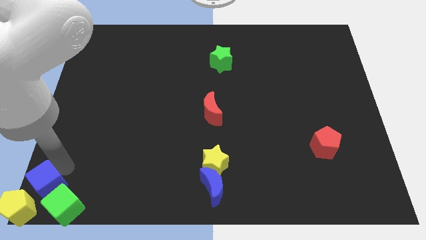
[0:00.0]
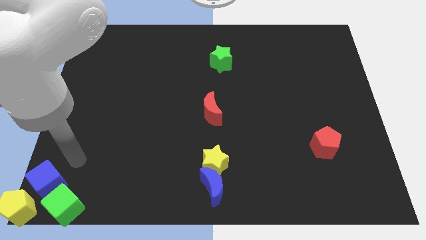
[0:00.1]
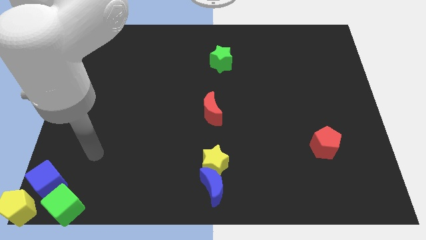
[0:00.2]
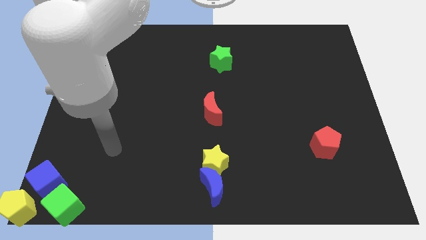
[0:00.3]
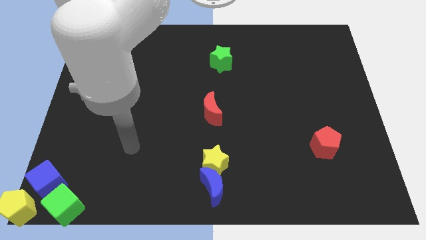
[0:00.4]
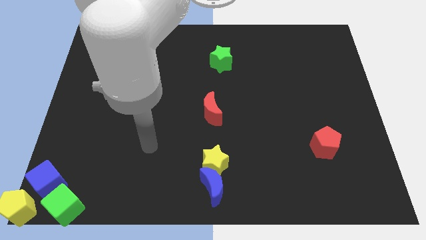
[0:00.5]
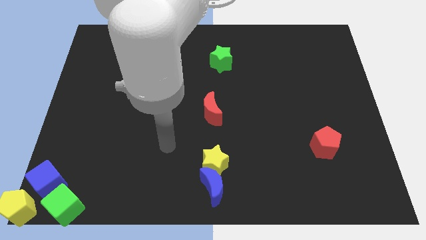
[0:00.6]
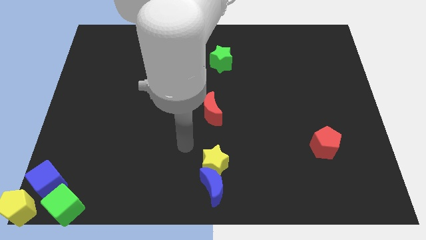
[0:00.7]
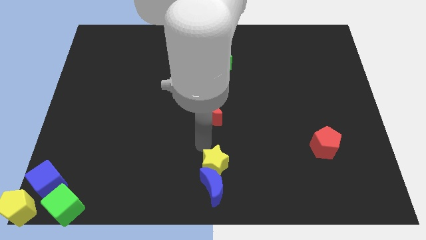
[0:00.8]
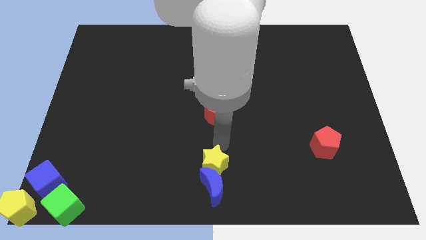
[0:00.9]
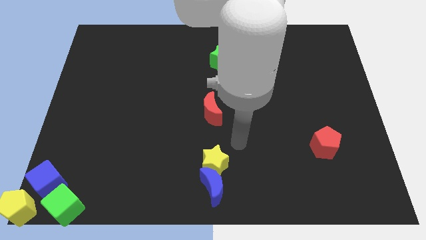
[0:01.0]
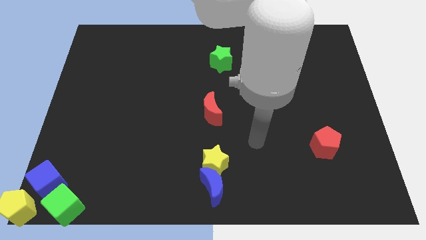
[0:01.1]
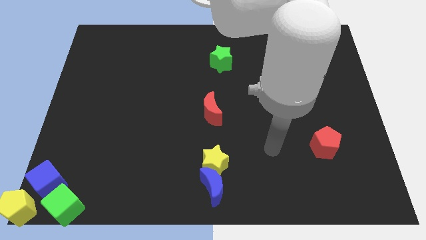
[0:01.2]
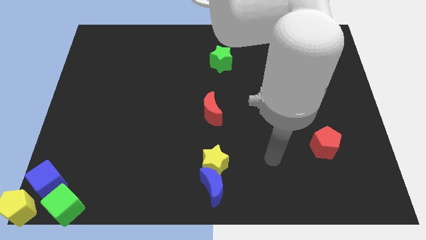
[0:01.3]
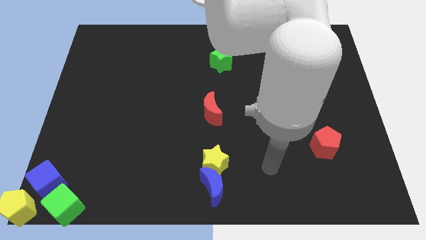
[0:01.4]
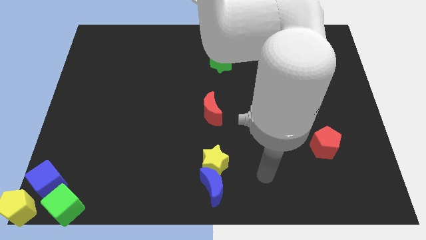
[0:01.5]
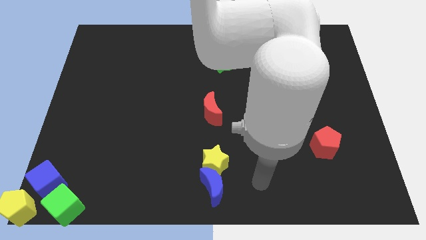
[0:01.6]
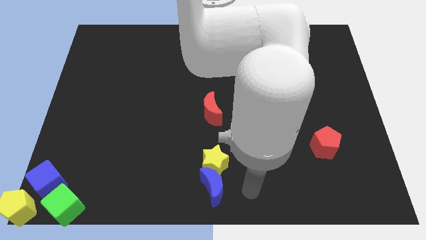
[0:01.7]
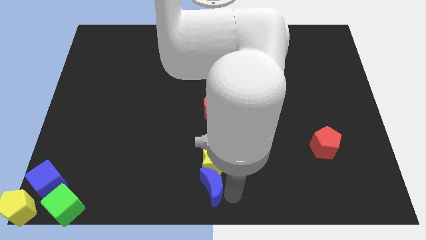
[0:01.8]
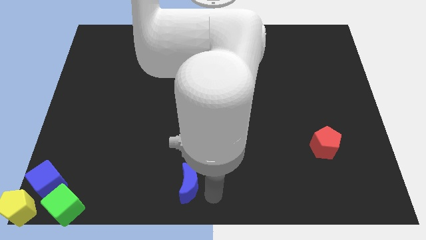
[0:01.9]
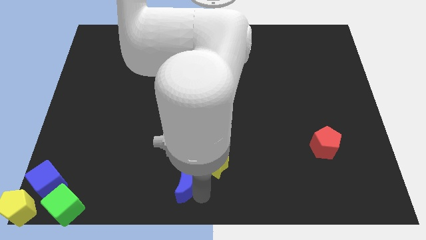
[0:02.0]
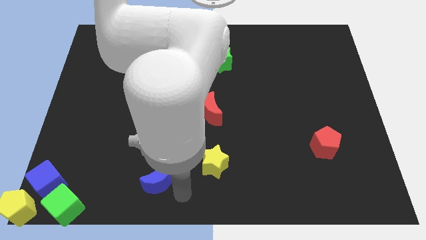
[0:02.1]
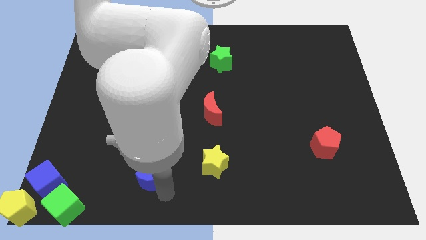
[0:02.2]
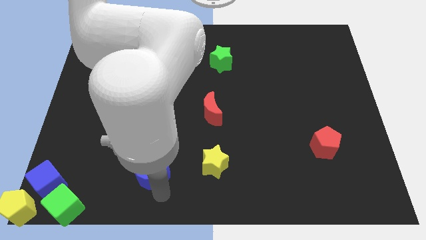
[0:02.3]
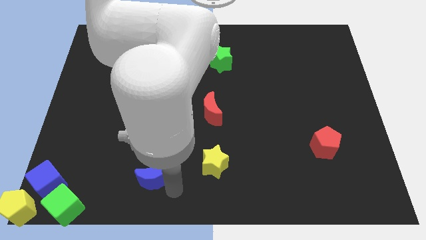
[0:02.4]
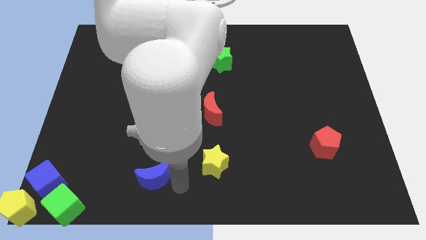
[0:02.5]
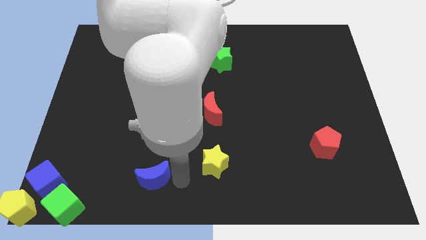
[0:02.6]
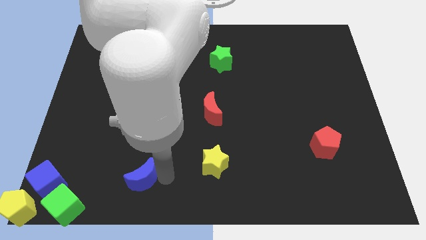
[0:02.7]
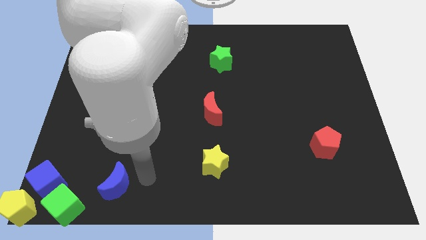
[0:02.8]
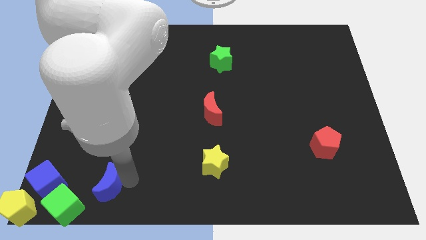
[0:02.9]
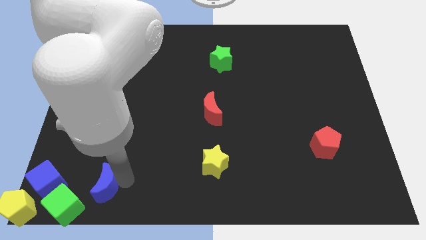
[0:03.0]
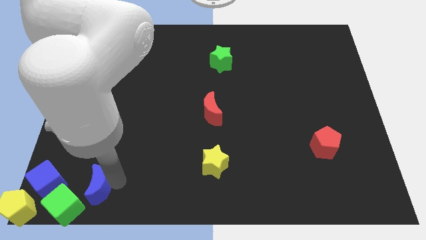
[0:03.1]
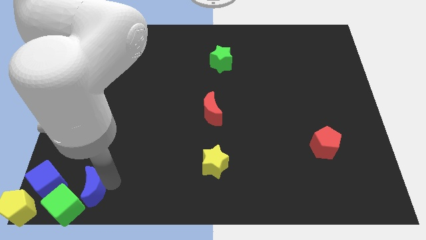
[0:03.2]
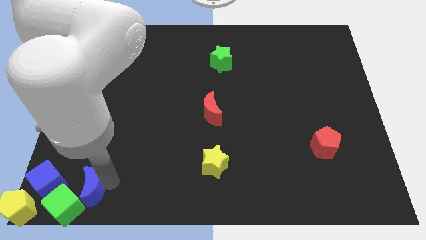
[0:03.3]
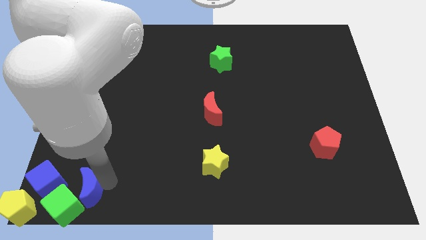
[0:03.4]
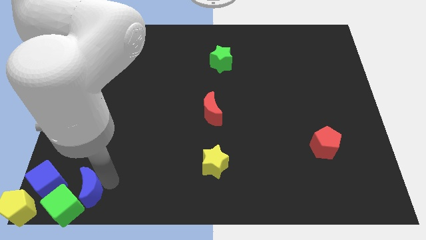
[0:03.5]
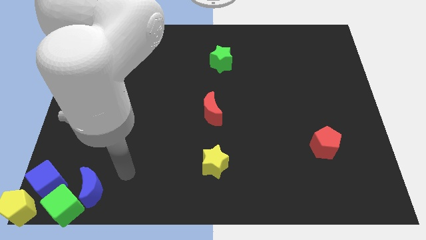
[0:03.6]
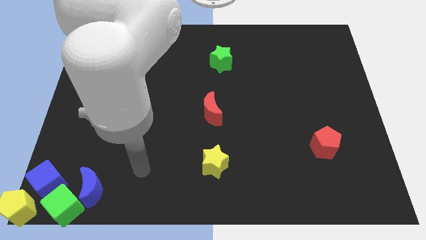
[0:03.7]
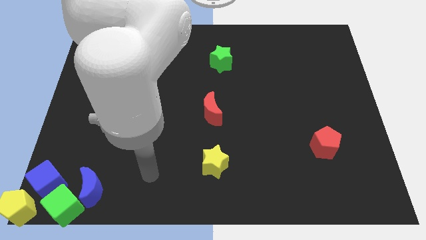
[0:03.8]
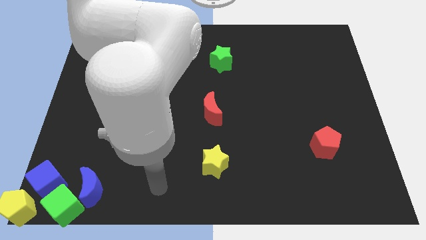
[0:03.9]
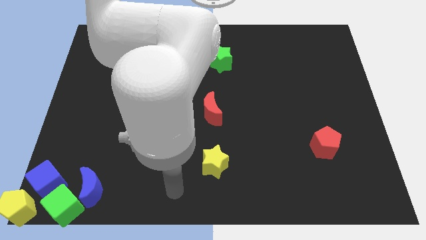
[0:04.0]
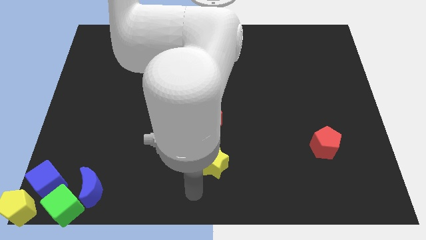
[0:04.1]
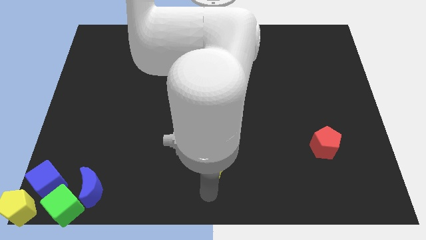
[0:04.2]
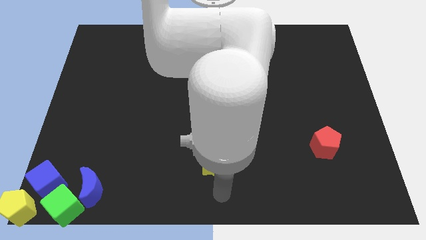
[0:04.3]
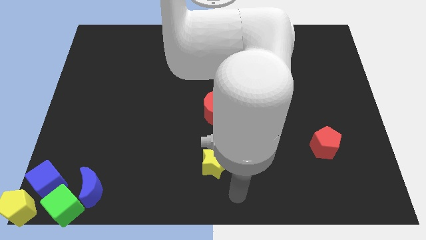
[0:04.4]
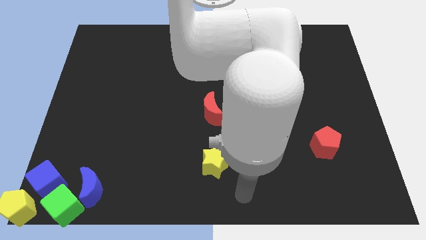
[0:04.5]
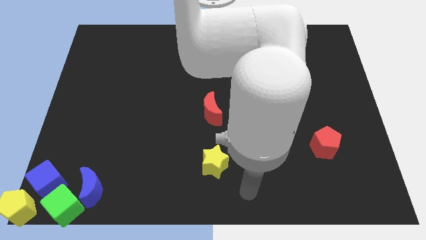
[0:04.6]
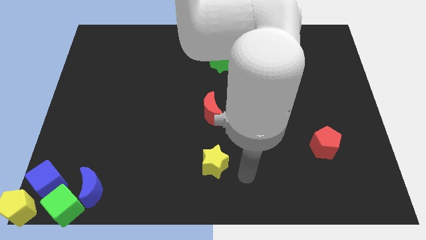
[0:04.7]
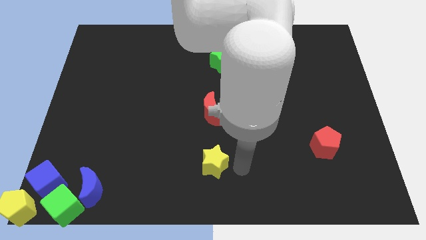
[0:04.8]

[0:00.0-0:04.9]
push the blue crescent into the green cube

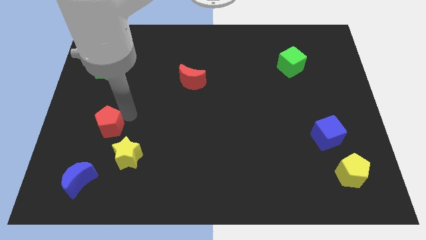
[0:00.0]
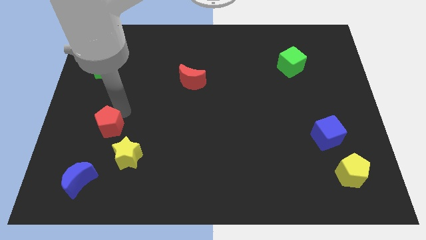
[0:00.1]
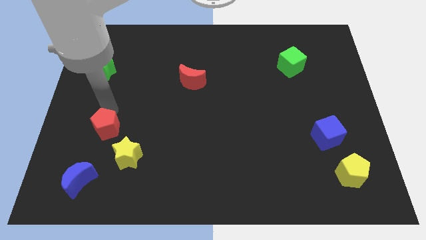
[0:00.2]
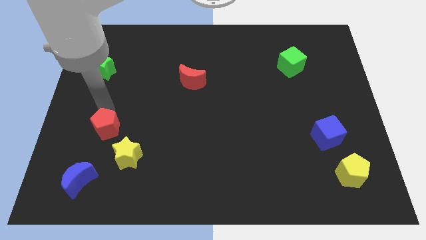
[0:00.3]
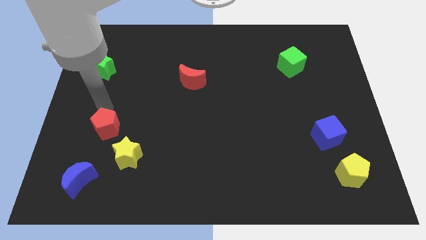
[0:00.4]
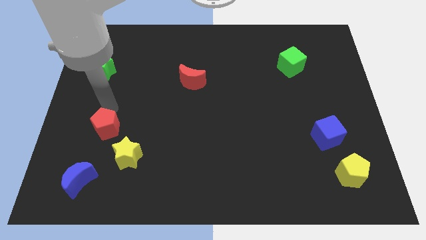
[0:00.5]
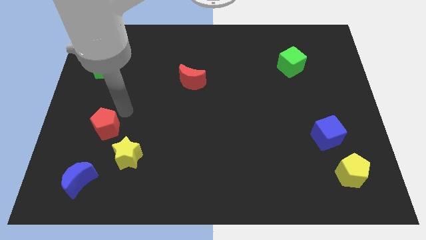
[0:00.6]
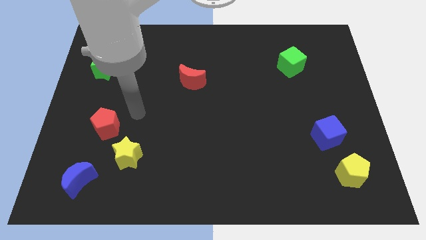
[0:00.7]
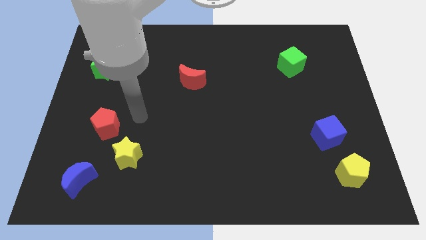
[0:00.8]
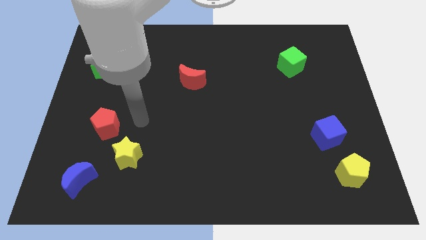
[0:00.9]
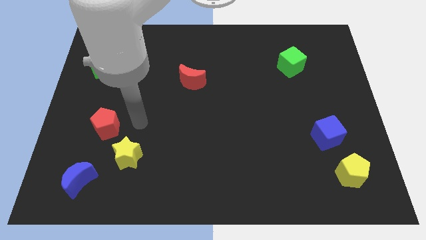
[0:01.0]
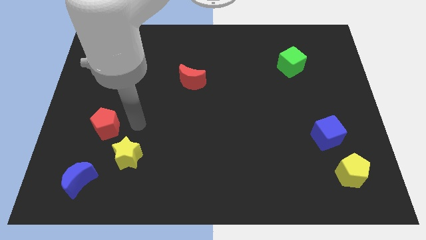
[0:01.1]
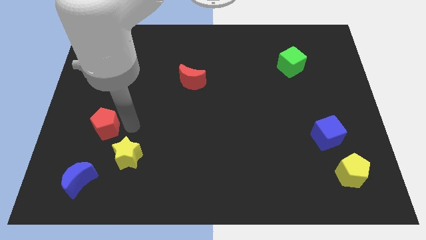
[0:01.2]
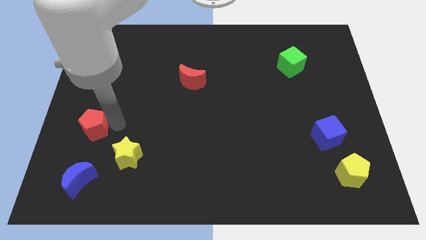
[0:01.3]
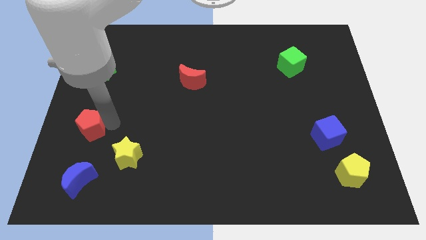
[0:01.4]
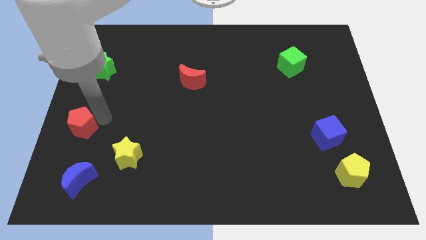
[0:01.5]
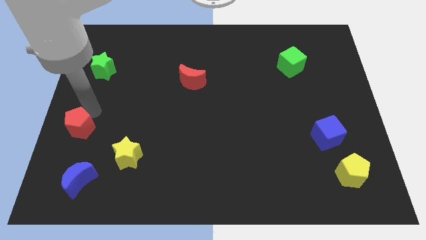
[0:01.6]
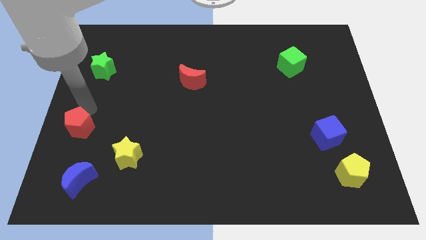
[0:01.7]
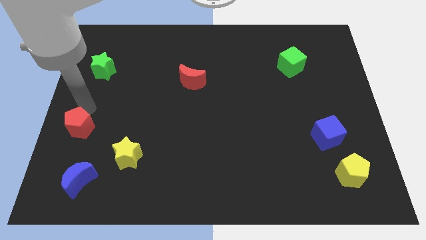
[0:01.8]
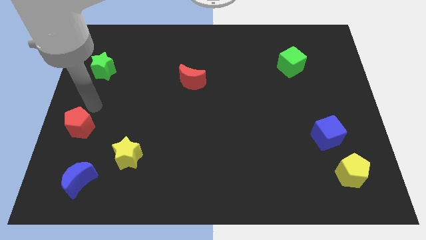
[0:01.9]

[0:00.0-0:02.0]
move red pentagon left diagonally towards blue crescent

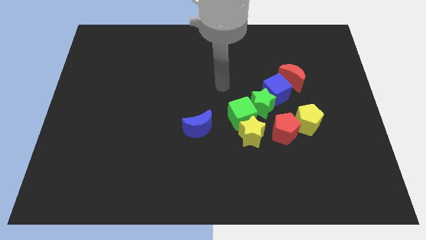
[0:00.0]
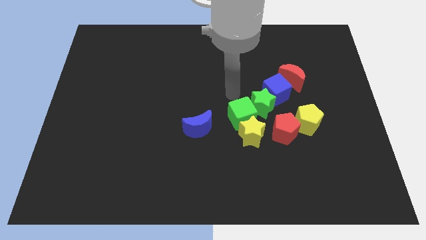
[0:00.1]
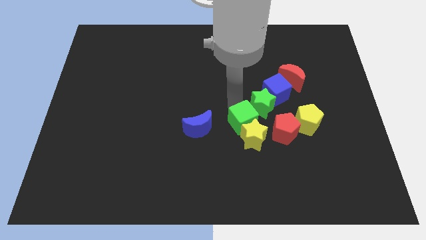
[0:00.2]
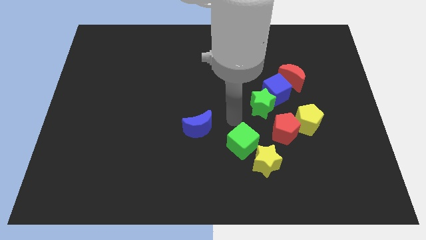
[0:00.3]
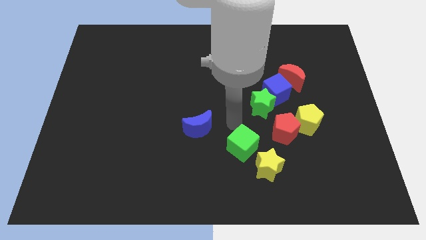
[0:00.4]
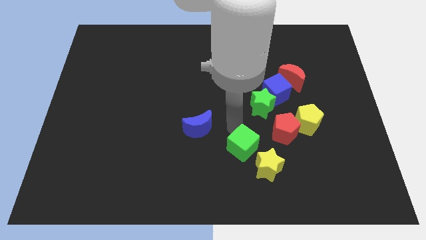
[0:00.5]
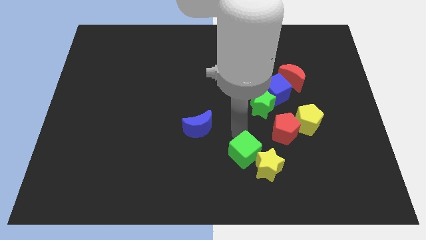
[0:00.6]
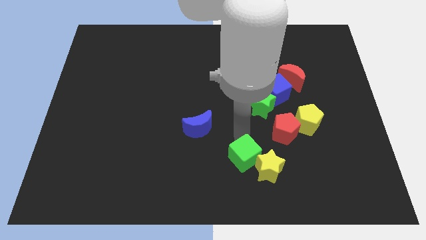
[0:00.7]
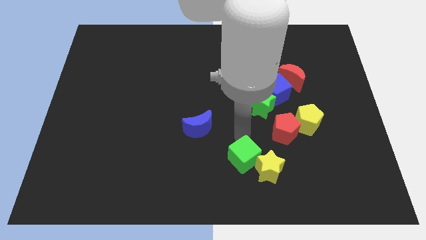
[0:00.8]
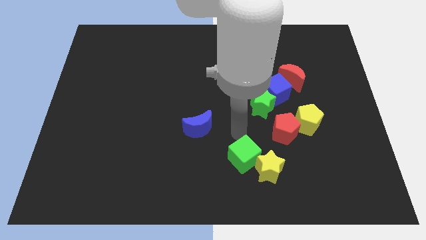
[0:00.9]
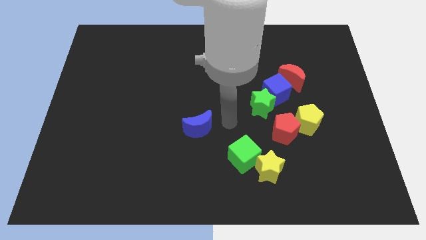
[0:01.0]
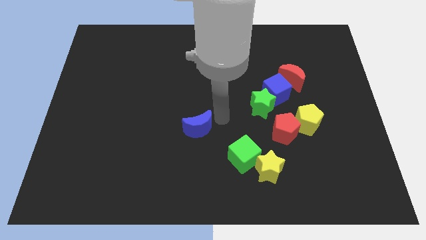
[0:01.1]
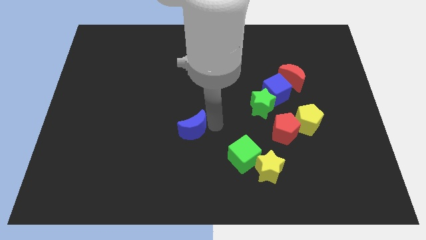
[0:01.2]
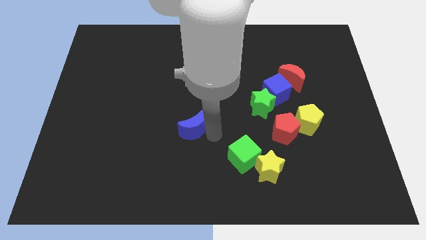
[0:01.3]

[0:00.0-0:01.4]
move the green cube into a yellow star

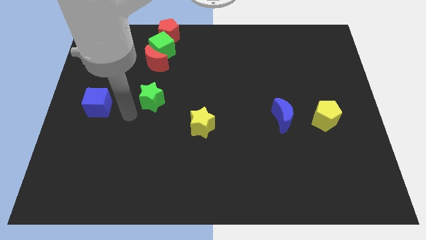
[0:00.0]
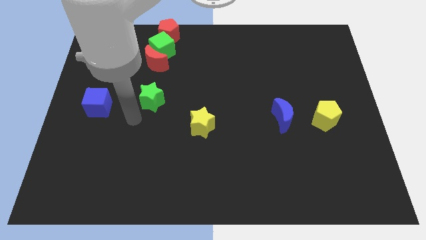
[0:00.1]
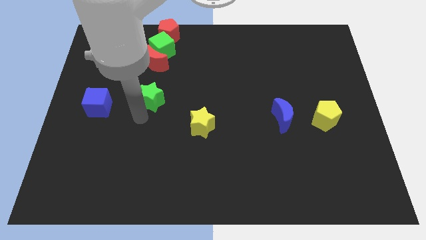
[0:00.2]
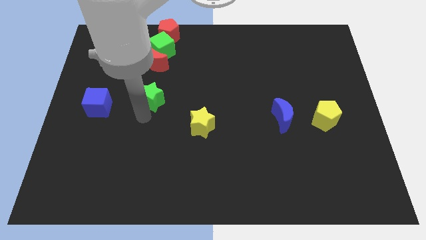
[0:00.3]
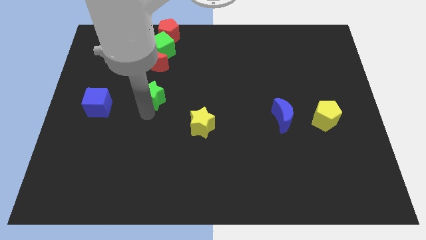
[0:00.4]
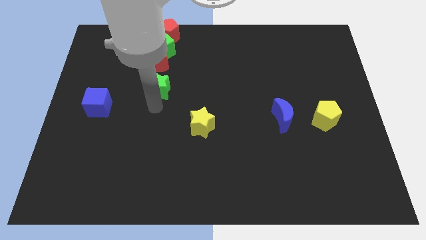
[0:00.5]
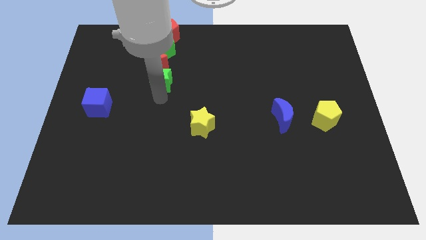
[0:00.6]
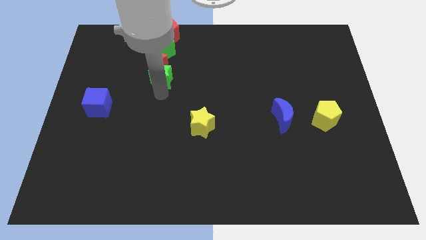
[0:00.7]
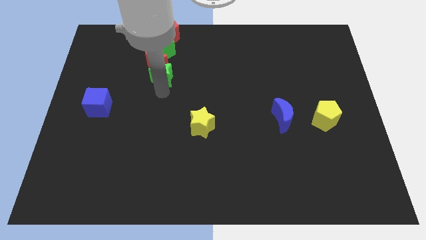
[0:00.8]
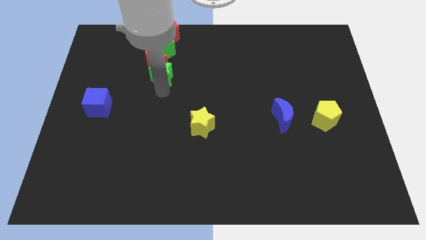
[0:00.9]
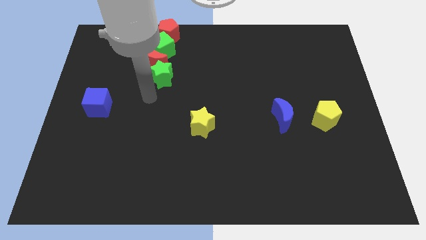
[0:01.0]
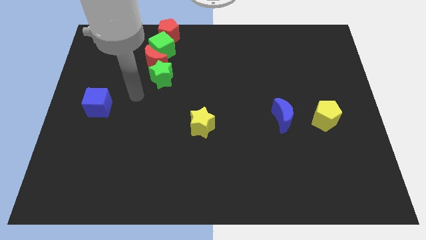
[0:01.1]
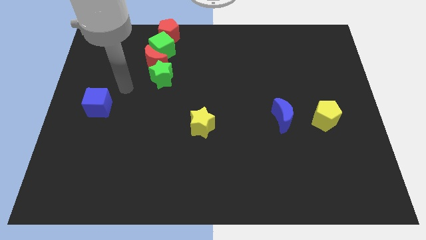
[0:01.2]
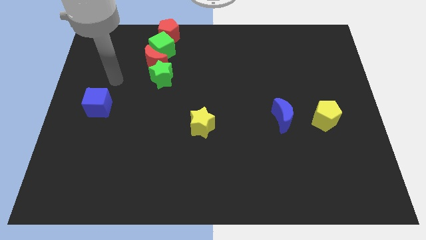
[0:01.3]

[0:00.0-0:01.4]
place the green star below the red crescent
